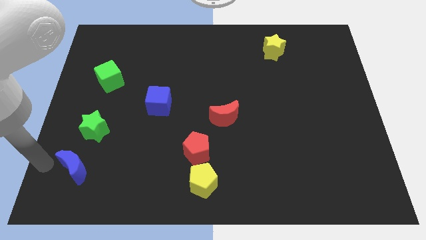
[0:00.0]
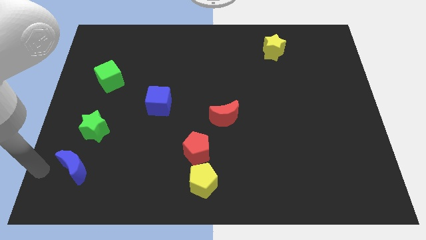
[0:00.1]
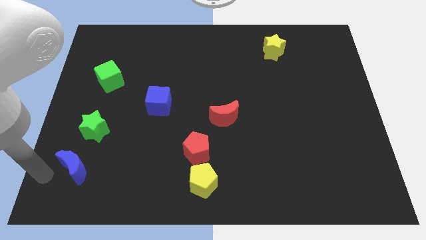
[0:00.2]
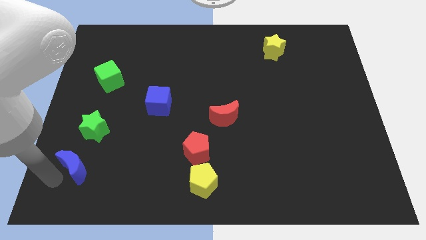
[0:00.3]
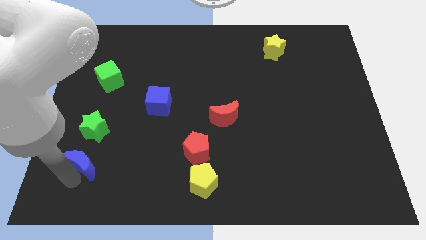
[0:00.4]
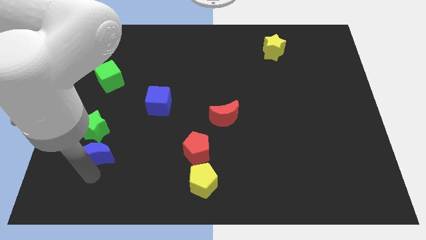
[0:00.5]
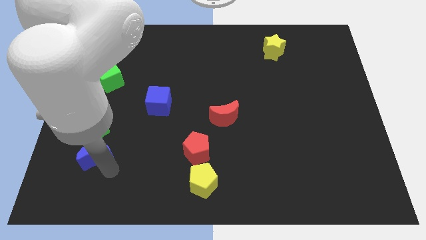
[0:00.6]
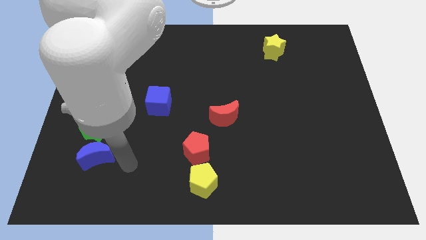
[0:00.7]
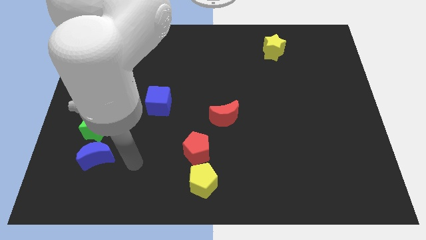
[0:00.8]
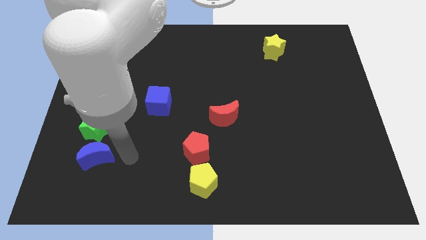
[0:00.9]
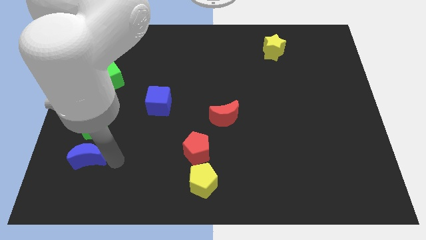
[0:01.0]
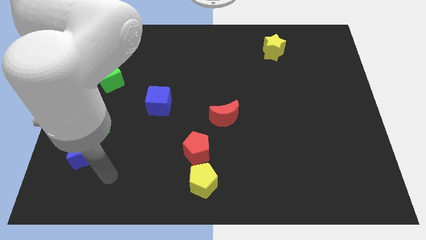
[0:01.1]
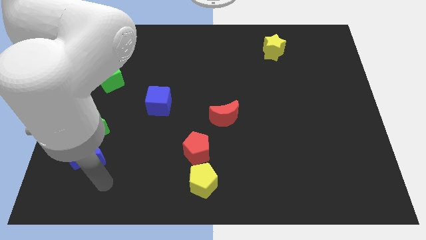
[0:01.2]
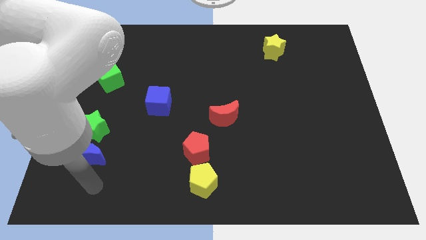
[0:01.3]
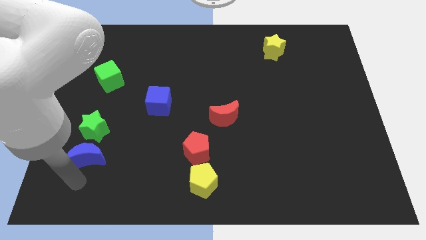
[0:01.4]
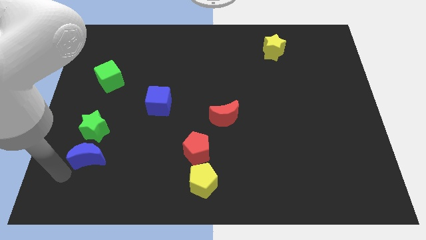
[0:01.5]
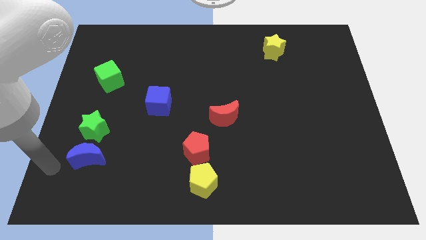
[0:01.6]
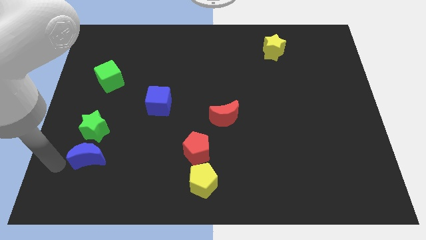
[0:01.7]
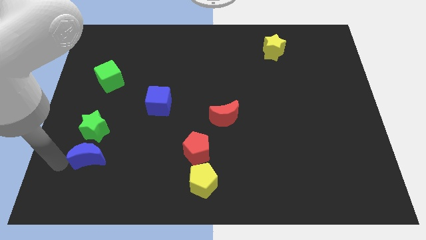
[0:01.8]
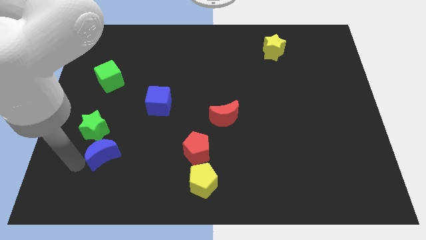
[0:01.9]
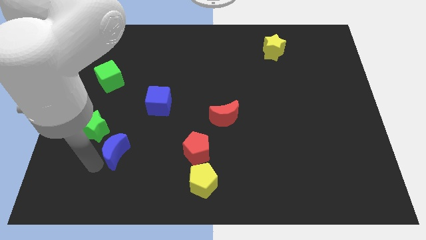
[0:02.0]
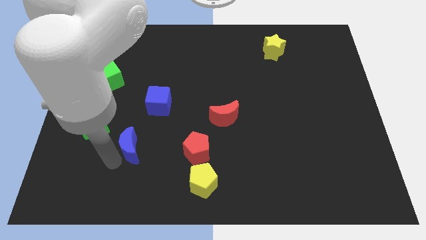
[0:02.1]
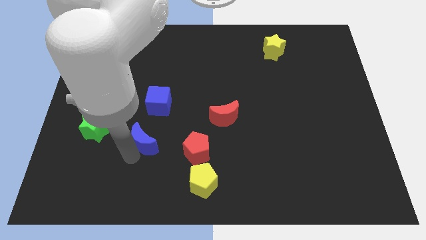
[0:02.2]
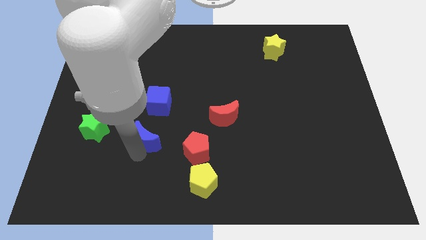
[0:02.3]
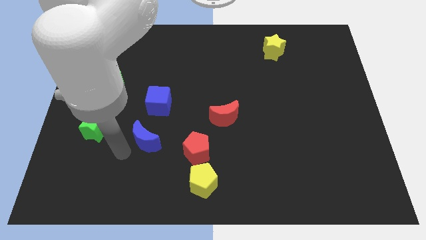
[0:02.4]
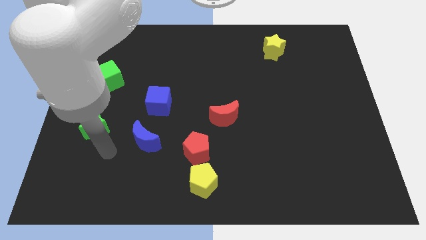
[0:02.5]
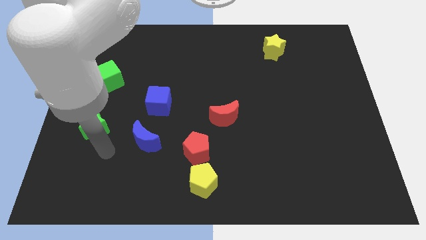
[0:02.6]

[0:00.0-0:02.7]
place your arm below green star

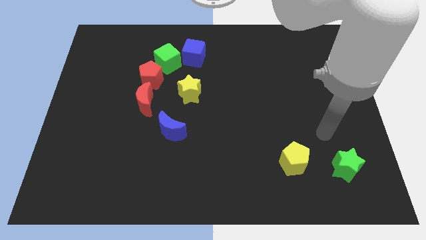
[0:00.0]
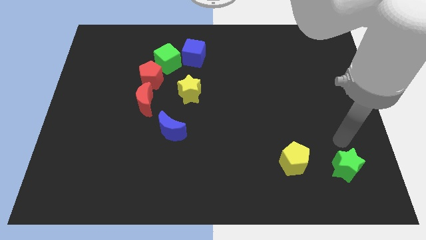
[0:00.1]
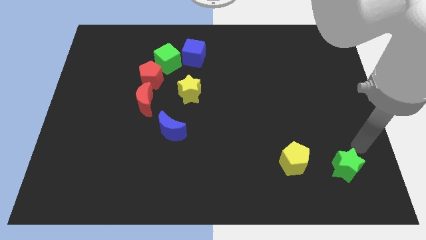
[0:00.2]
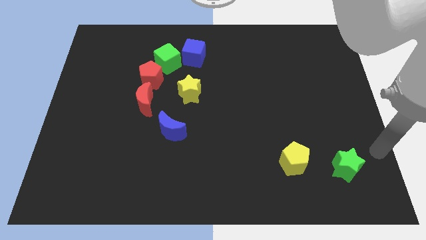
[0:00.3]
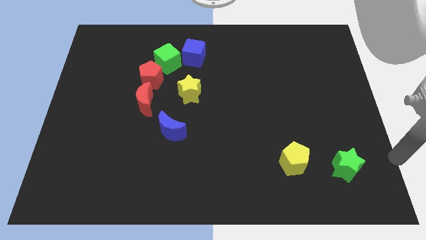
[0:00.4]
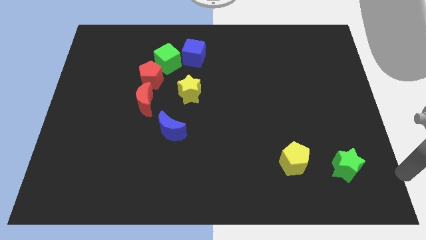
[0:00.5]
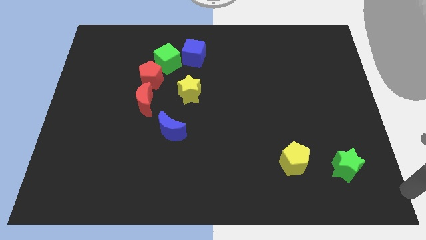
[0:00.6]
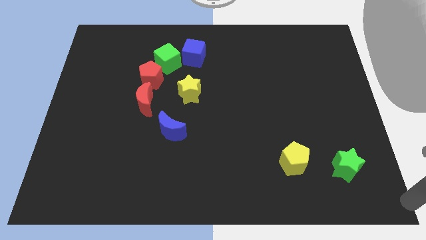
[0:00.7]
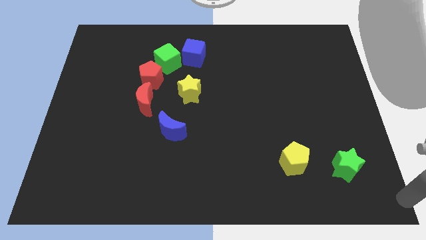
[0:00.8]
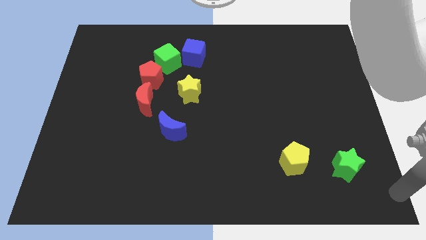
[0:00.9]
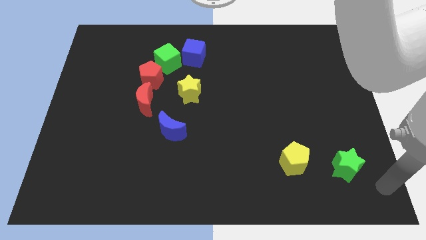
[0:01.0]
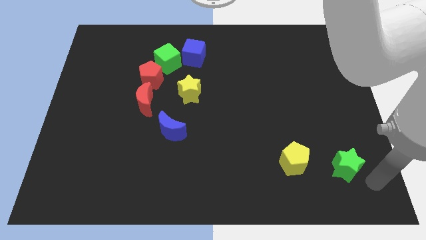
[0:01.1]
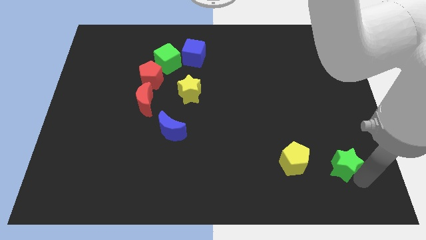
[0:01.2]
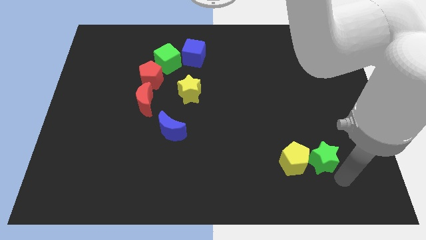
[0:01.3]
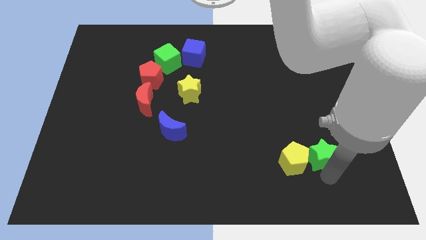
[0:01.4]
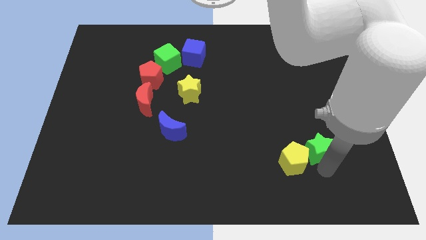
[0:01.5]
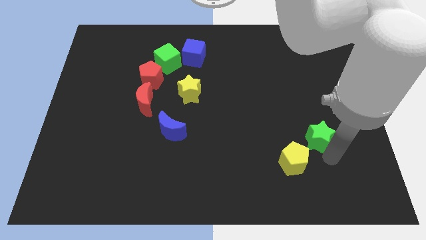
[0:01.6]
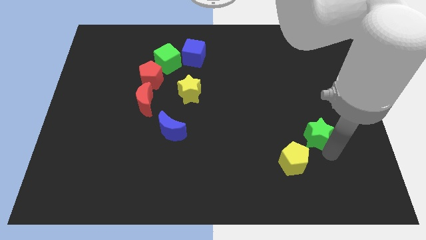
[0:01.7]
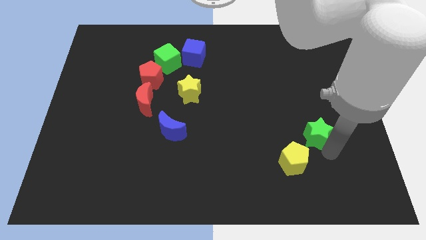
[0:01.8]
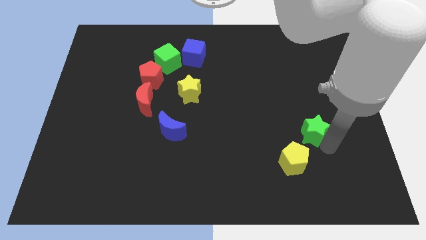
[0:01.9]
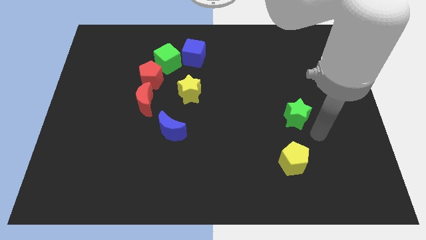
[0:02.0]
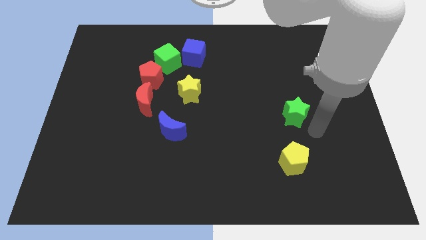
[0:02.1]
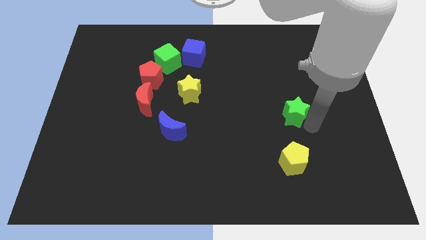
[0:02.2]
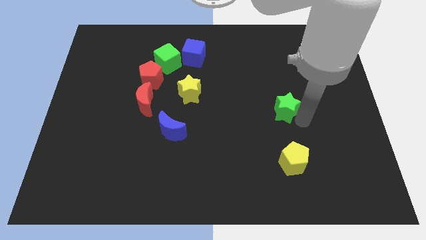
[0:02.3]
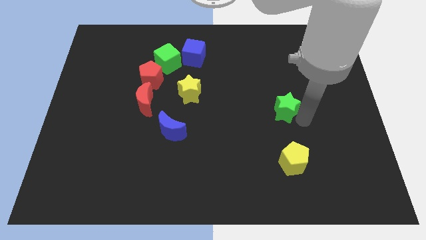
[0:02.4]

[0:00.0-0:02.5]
push green star above yellow pentagon

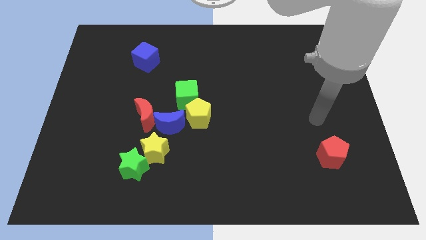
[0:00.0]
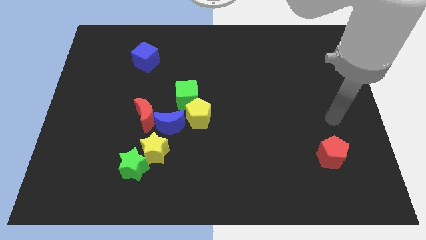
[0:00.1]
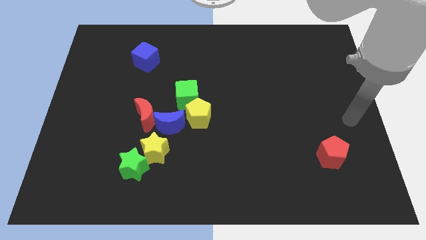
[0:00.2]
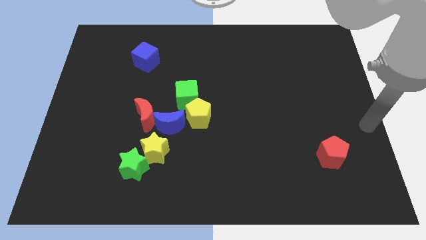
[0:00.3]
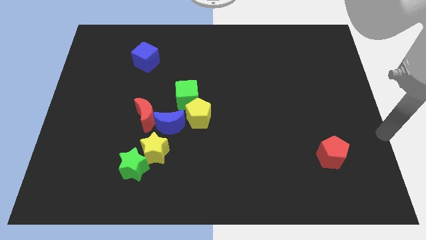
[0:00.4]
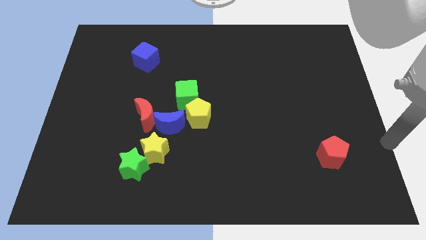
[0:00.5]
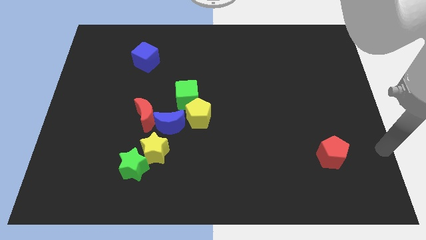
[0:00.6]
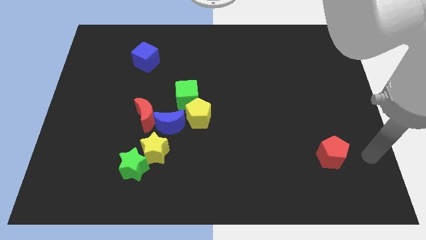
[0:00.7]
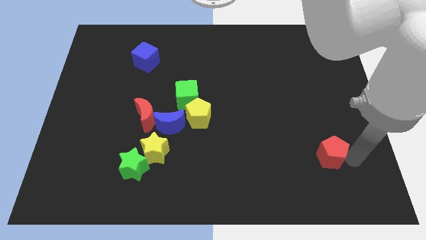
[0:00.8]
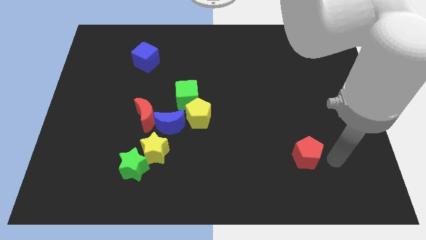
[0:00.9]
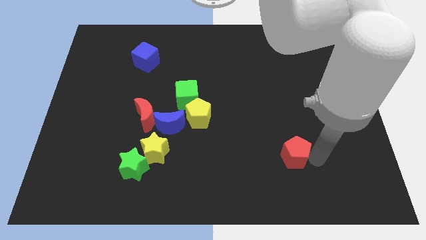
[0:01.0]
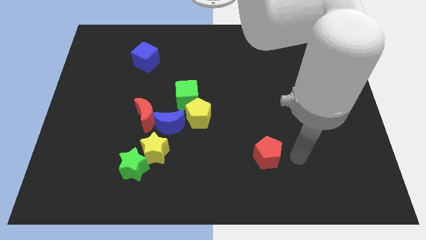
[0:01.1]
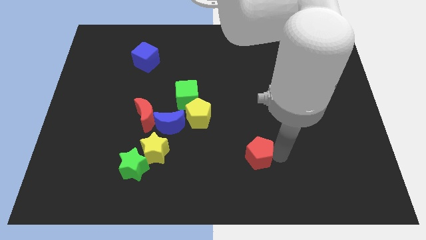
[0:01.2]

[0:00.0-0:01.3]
push the red pentagon to the left

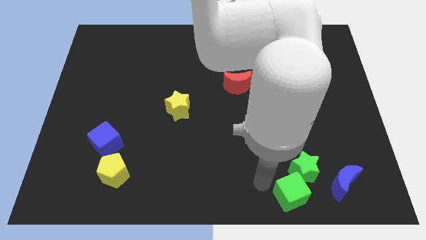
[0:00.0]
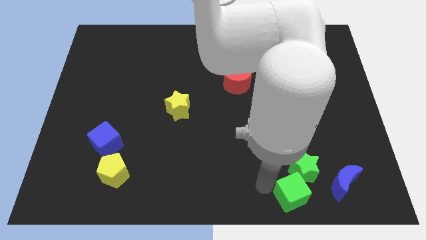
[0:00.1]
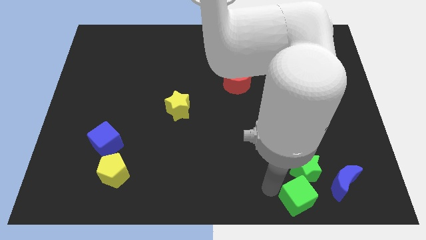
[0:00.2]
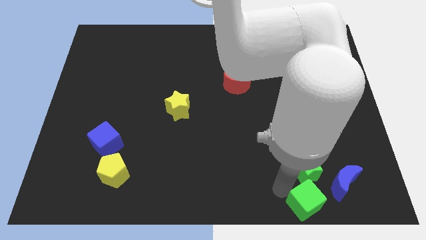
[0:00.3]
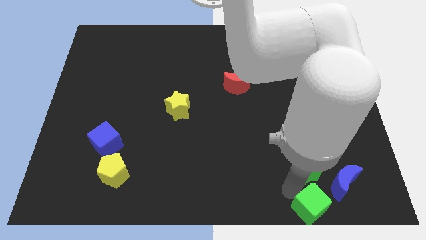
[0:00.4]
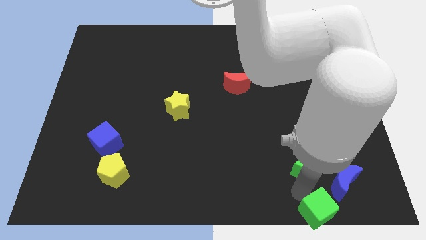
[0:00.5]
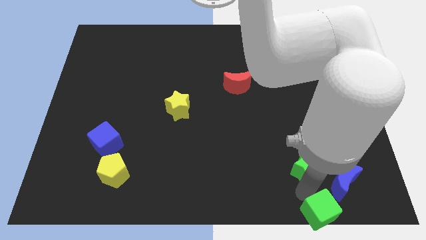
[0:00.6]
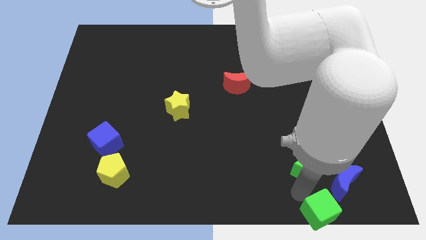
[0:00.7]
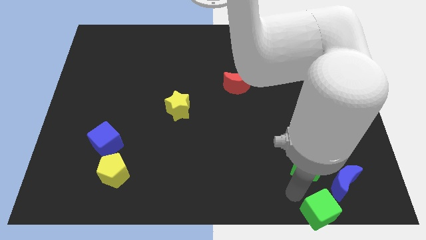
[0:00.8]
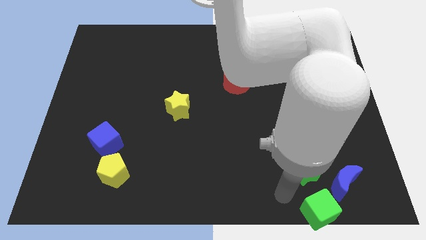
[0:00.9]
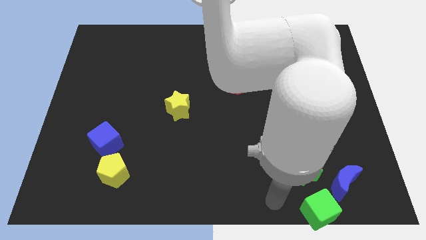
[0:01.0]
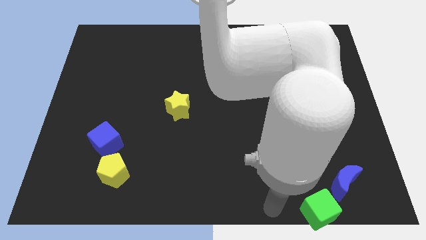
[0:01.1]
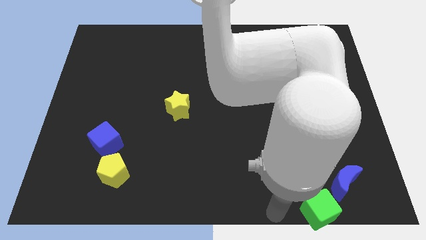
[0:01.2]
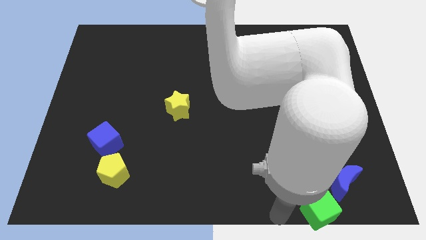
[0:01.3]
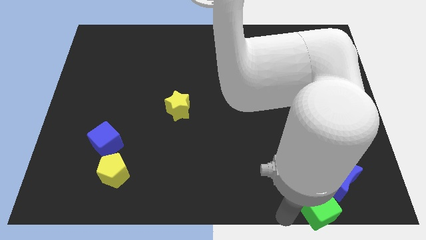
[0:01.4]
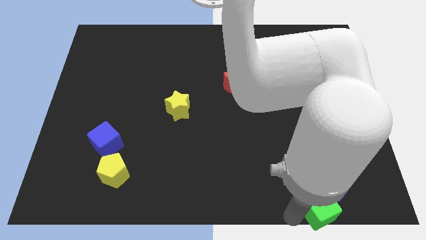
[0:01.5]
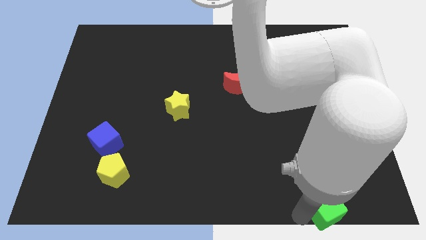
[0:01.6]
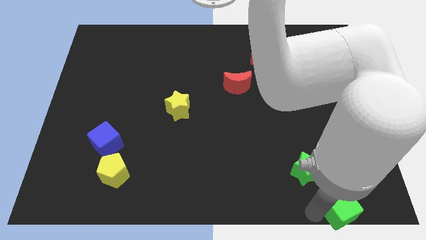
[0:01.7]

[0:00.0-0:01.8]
push the green cube to the bottom of the blue crescent

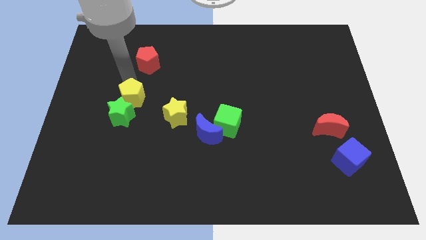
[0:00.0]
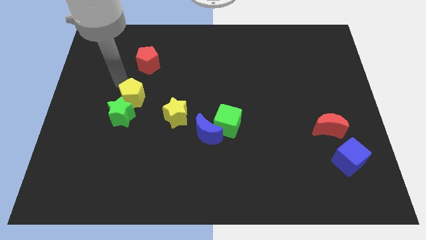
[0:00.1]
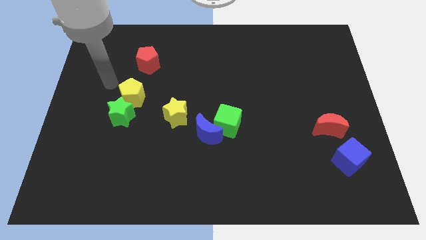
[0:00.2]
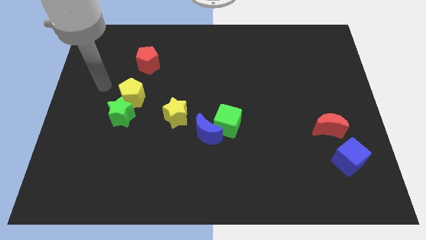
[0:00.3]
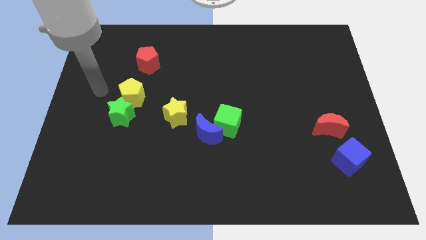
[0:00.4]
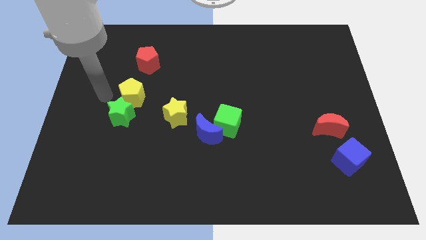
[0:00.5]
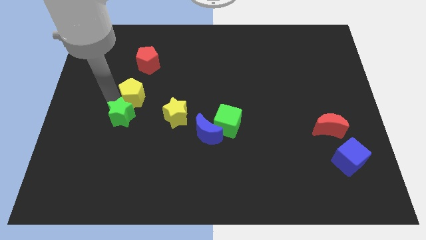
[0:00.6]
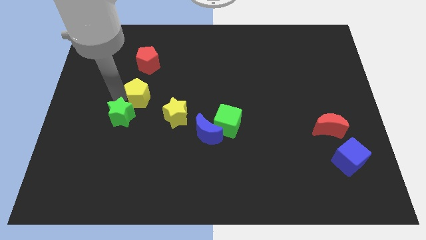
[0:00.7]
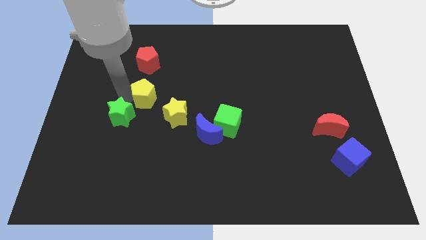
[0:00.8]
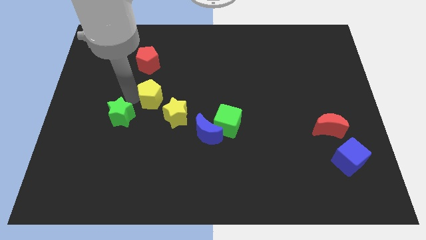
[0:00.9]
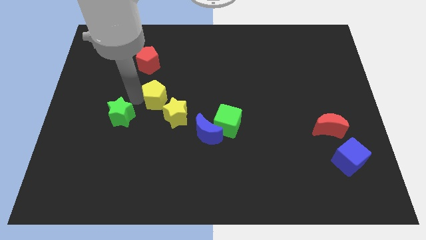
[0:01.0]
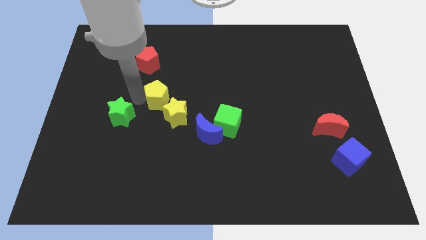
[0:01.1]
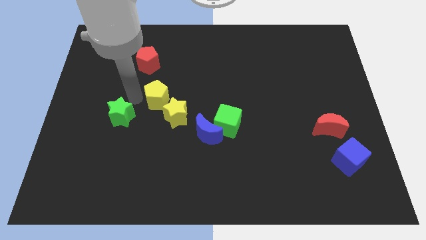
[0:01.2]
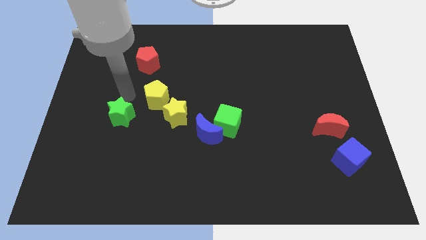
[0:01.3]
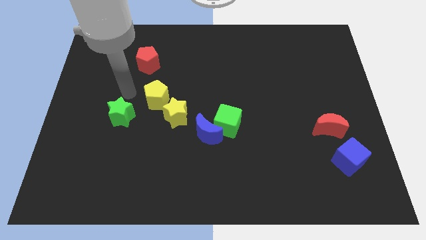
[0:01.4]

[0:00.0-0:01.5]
move the yellow pentagon to the top left side of the yellow star
